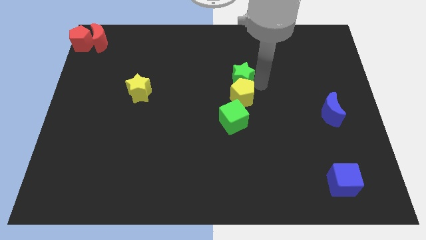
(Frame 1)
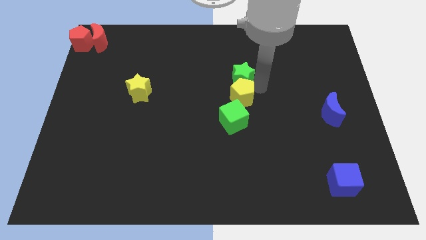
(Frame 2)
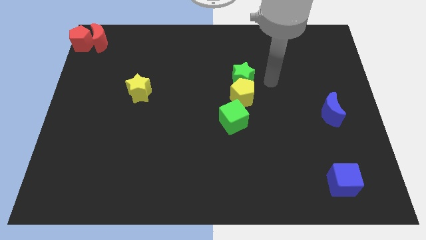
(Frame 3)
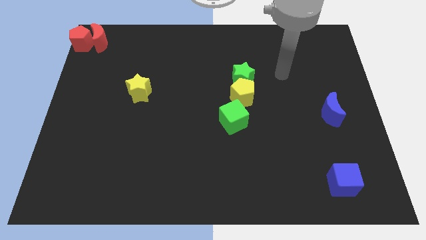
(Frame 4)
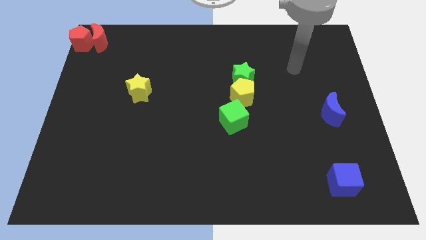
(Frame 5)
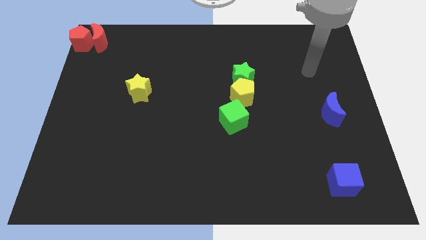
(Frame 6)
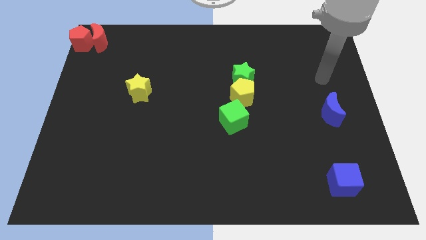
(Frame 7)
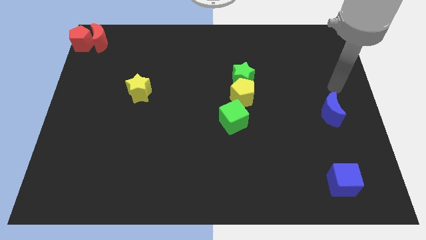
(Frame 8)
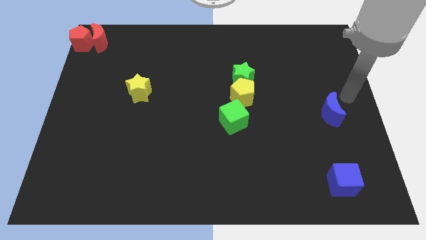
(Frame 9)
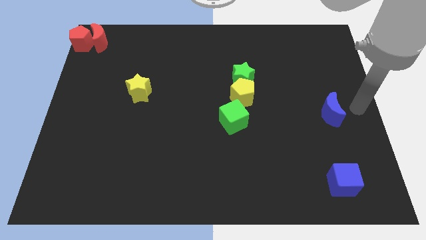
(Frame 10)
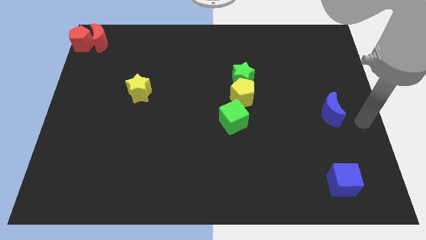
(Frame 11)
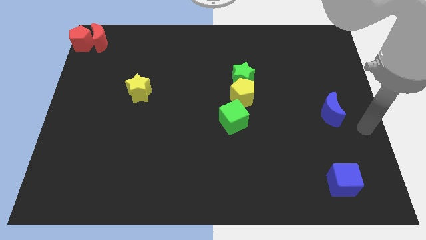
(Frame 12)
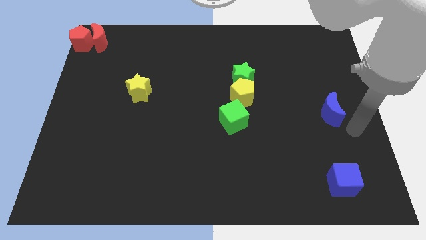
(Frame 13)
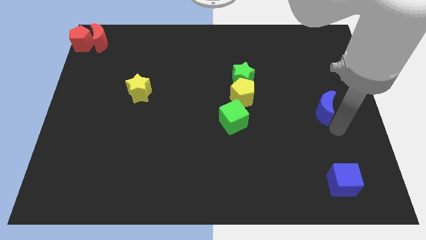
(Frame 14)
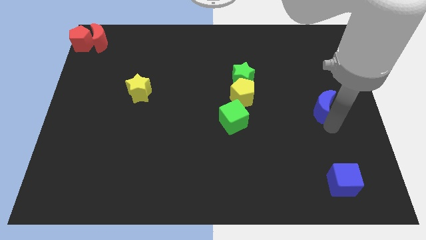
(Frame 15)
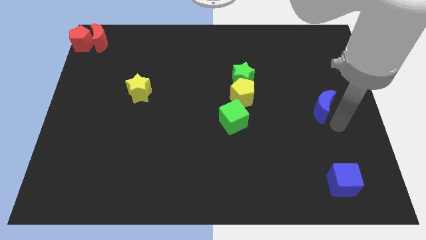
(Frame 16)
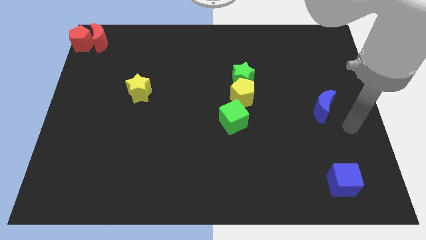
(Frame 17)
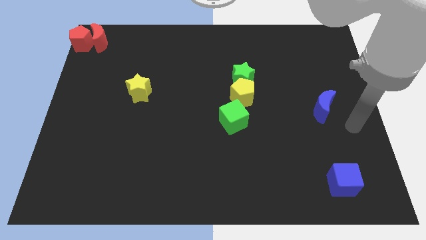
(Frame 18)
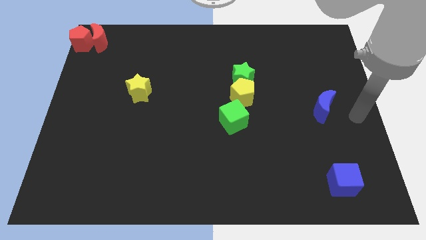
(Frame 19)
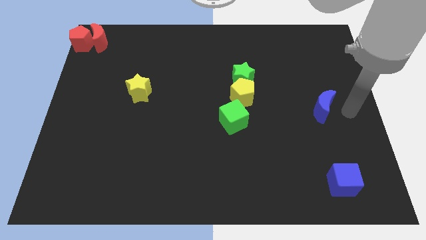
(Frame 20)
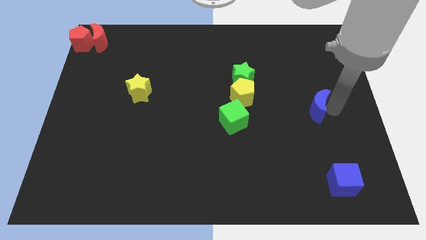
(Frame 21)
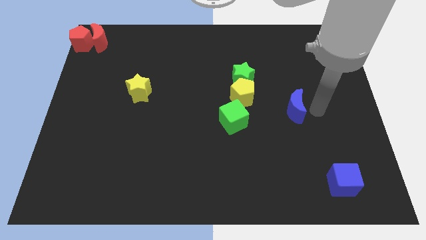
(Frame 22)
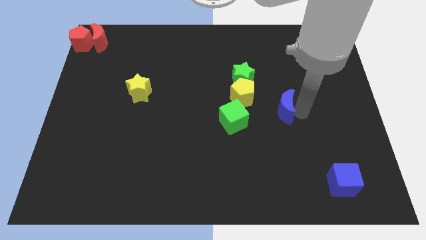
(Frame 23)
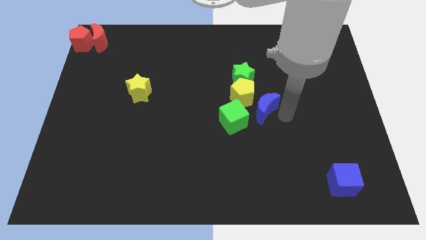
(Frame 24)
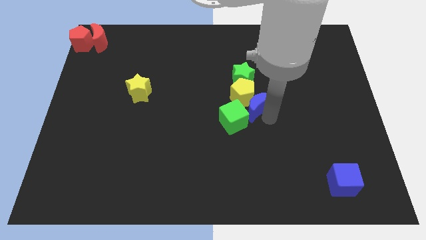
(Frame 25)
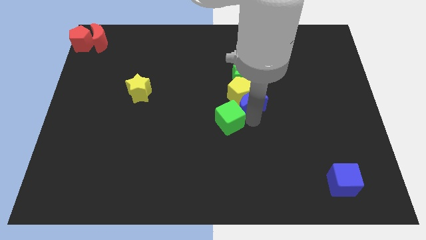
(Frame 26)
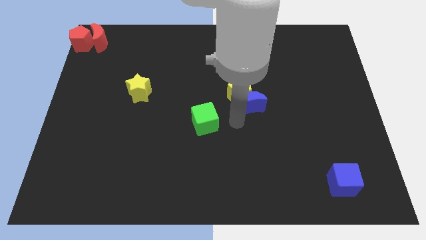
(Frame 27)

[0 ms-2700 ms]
push blue moon into green cube

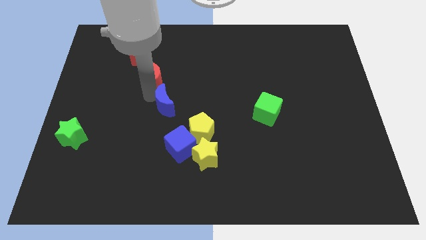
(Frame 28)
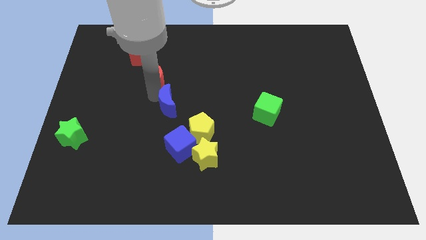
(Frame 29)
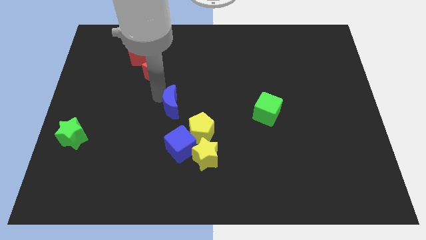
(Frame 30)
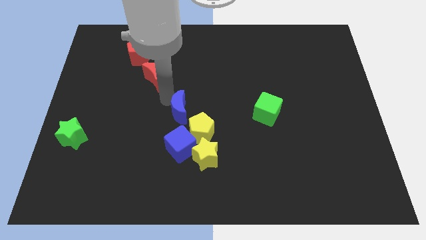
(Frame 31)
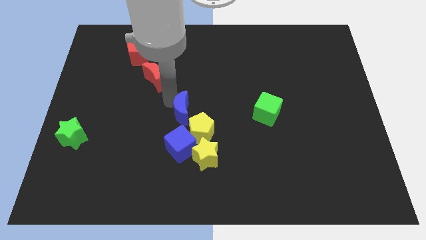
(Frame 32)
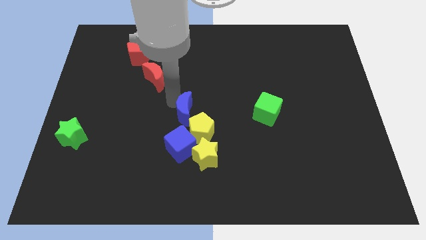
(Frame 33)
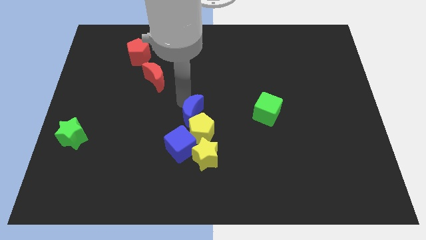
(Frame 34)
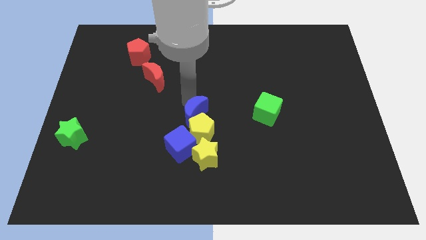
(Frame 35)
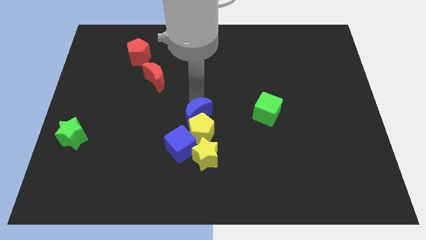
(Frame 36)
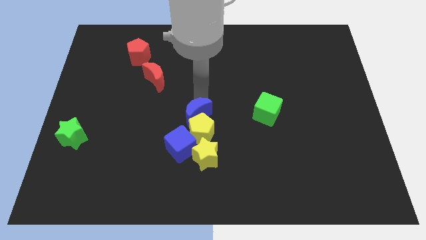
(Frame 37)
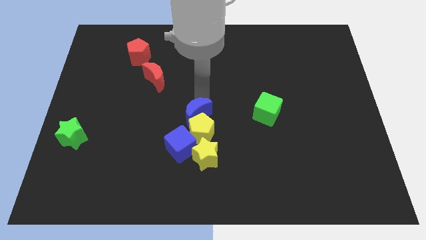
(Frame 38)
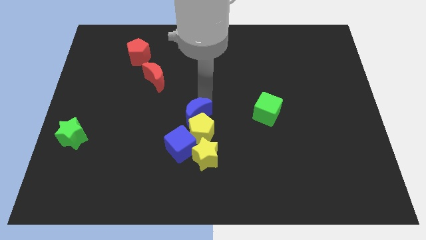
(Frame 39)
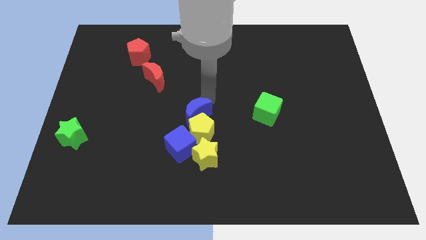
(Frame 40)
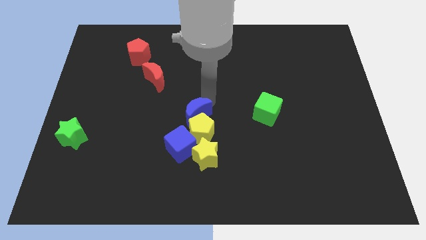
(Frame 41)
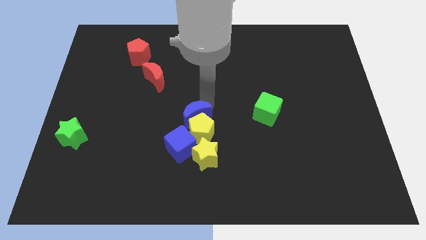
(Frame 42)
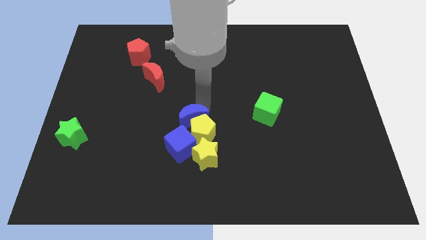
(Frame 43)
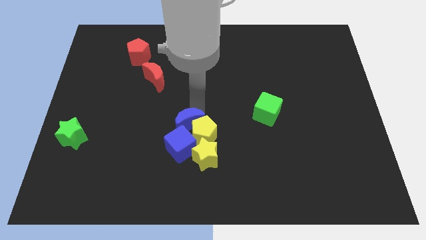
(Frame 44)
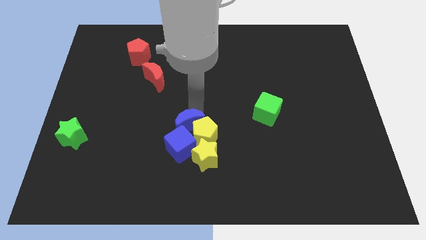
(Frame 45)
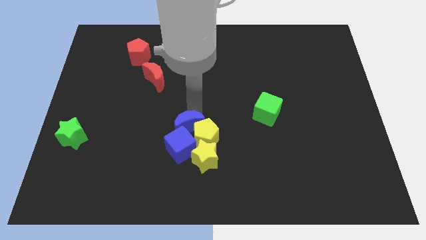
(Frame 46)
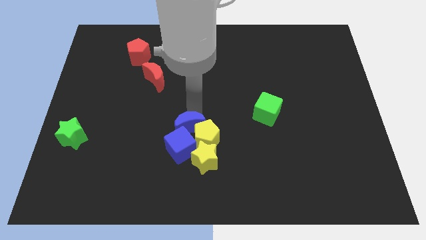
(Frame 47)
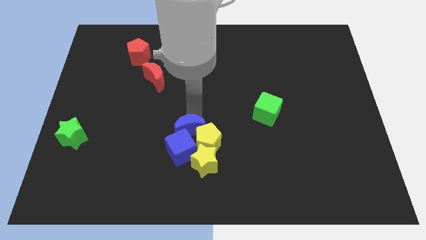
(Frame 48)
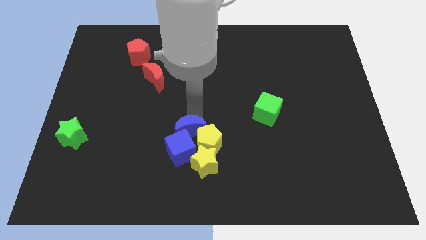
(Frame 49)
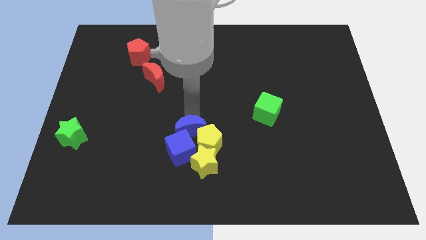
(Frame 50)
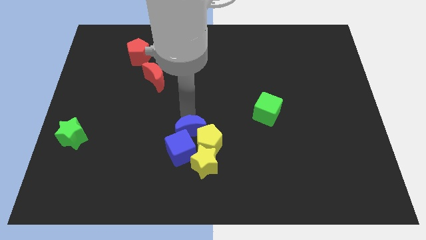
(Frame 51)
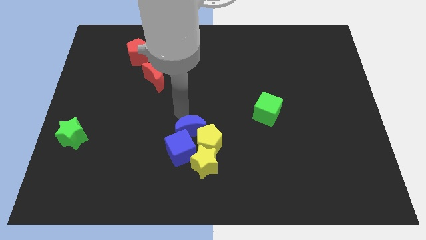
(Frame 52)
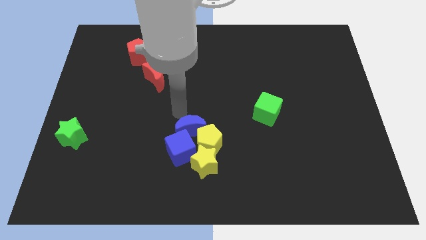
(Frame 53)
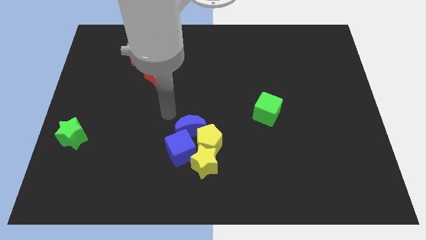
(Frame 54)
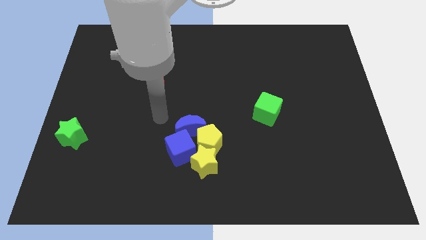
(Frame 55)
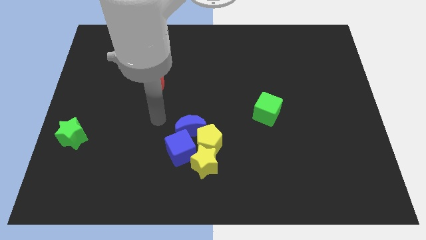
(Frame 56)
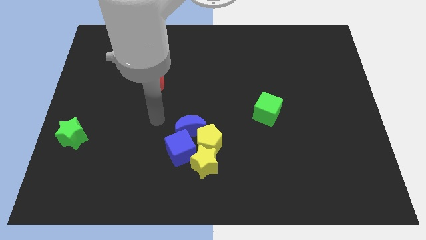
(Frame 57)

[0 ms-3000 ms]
push the blue crescent into the group of blocks

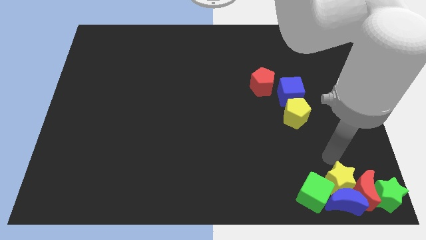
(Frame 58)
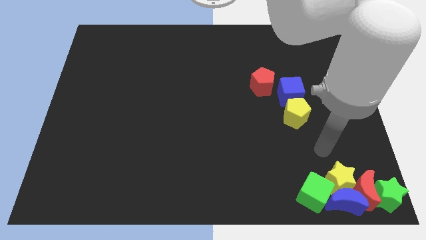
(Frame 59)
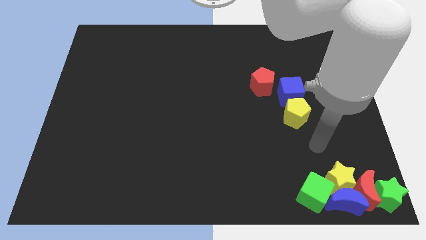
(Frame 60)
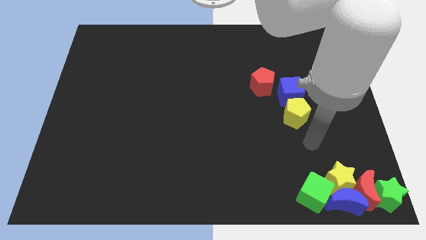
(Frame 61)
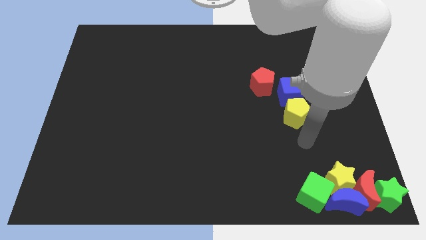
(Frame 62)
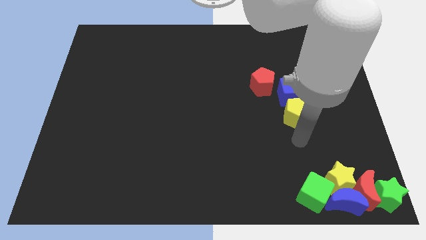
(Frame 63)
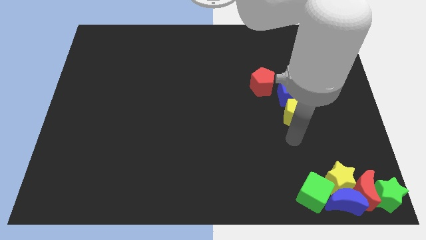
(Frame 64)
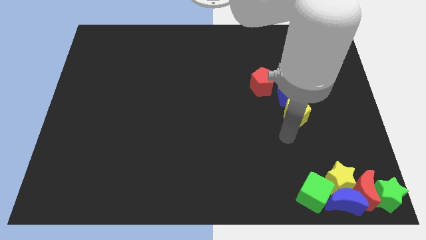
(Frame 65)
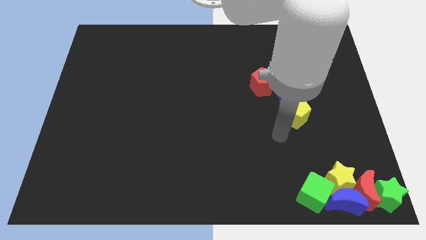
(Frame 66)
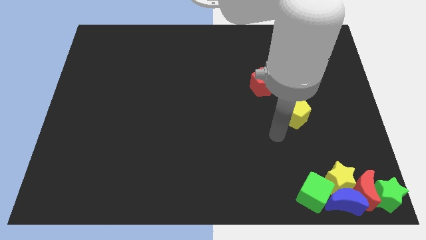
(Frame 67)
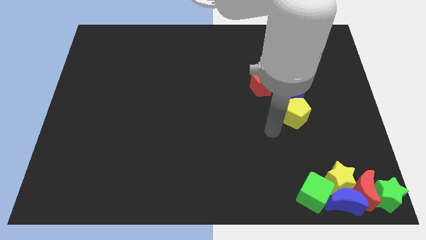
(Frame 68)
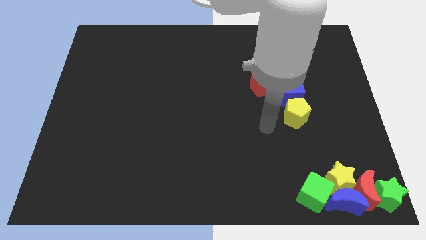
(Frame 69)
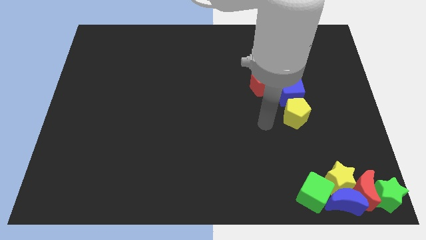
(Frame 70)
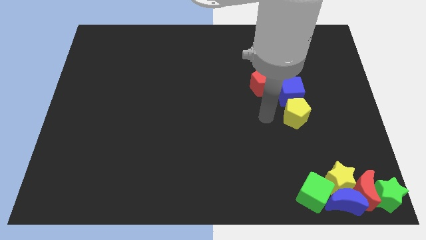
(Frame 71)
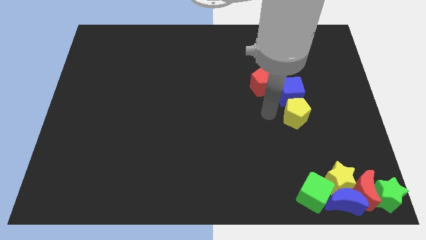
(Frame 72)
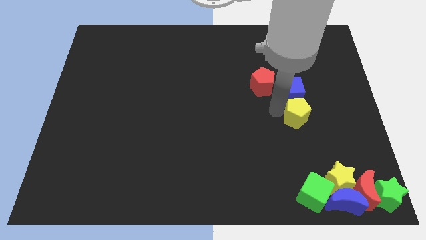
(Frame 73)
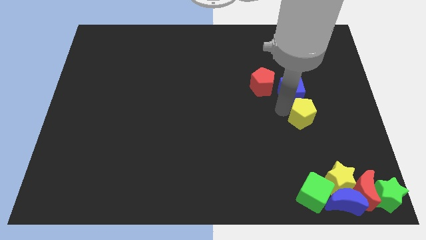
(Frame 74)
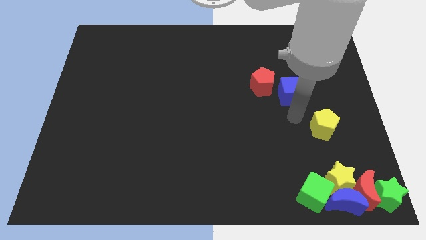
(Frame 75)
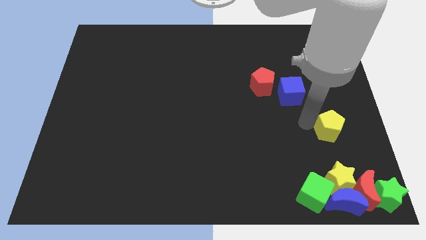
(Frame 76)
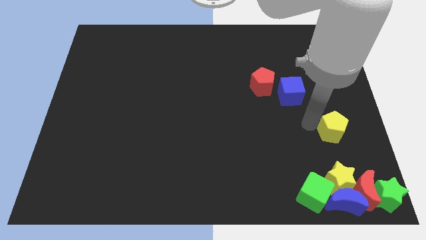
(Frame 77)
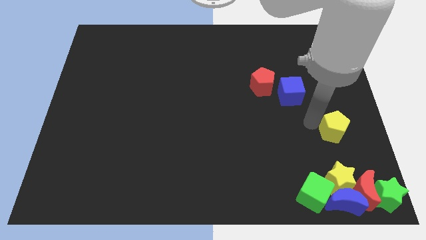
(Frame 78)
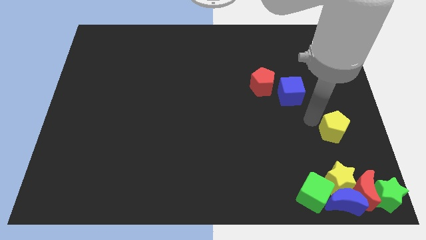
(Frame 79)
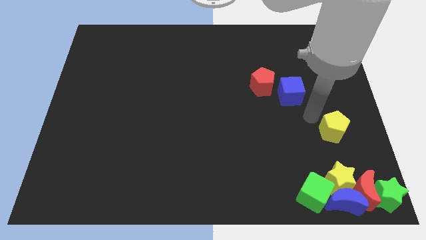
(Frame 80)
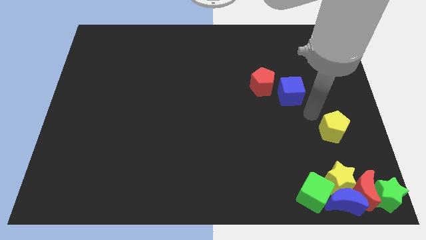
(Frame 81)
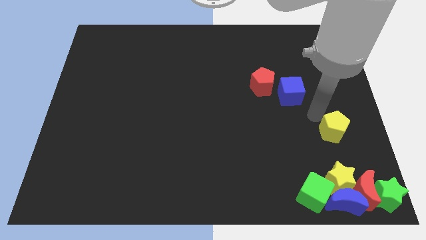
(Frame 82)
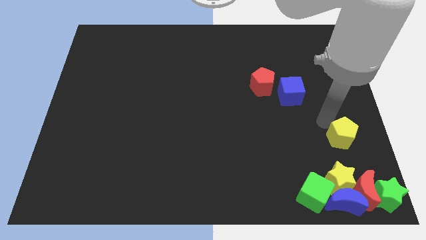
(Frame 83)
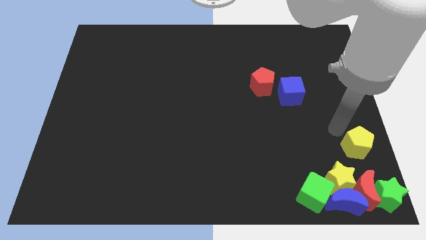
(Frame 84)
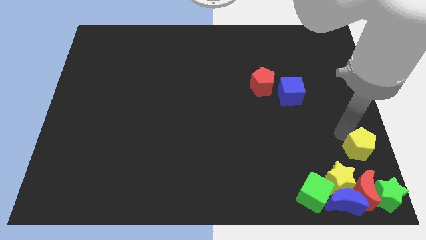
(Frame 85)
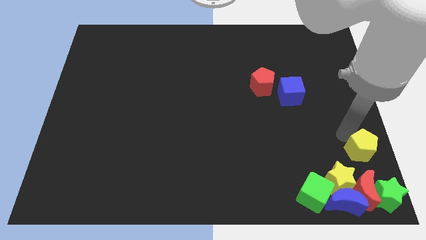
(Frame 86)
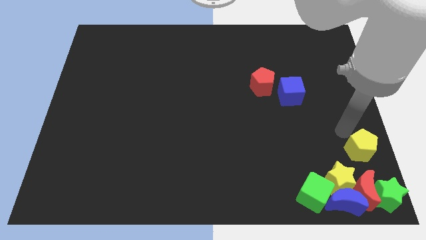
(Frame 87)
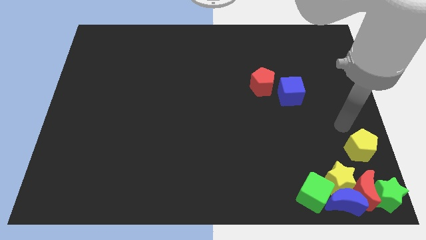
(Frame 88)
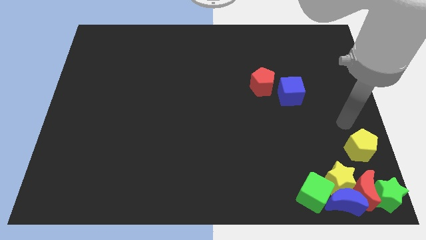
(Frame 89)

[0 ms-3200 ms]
separate the yellow pentagon from the blue cube

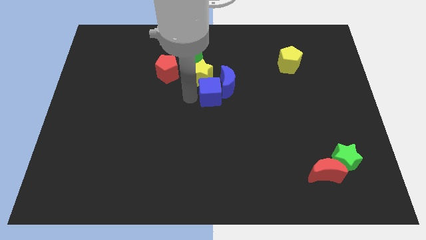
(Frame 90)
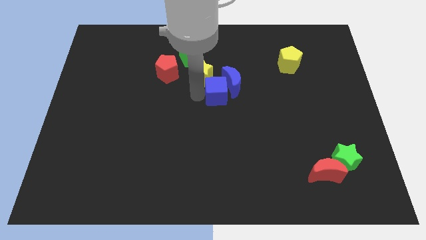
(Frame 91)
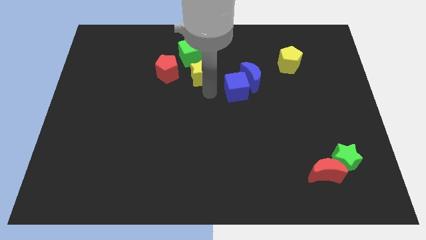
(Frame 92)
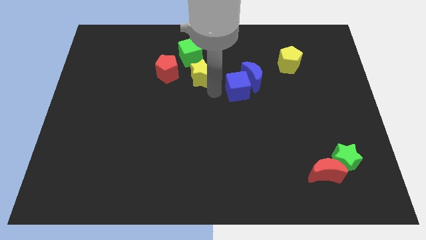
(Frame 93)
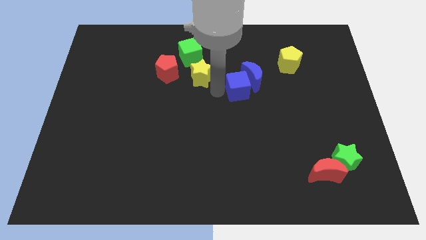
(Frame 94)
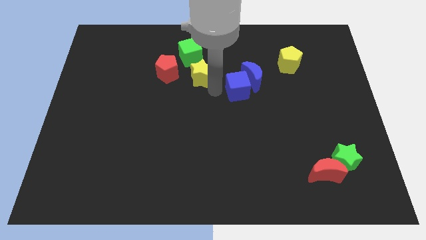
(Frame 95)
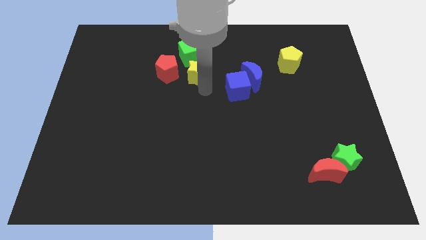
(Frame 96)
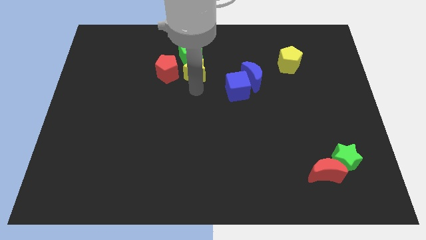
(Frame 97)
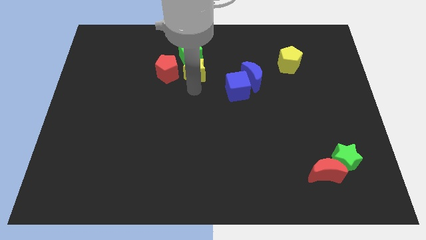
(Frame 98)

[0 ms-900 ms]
push the blue cube and blue moon to the right
